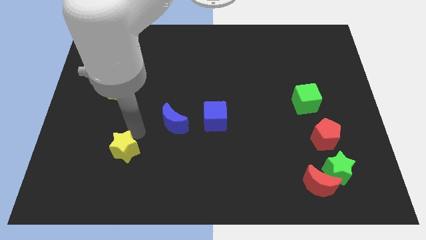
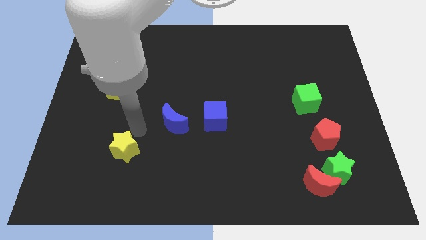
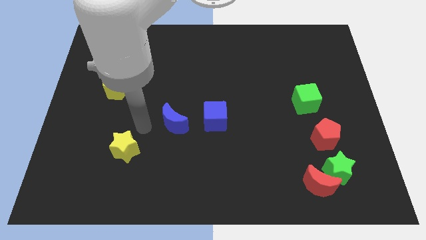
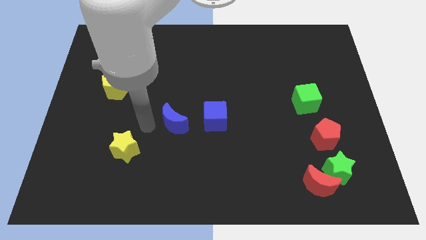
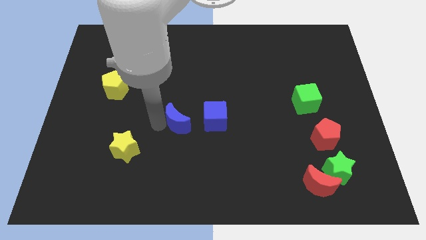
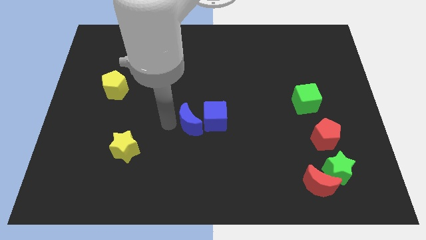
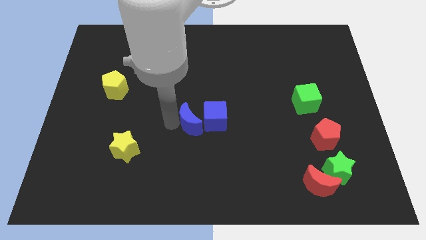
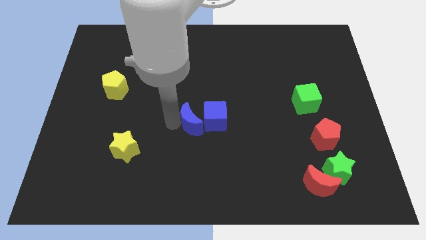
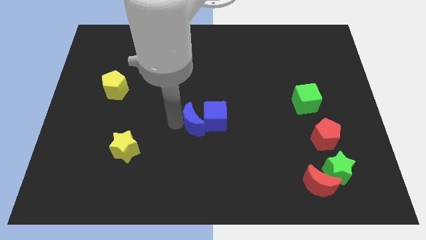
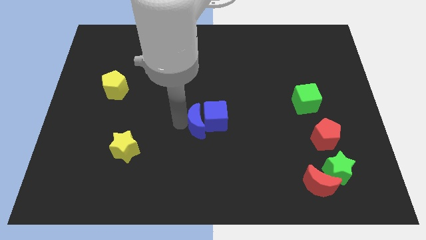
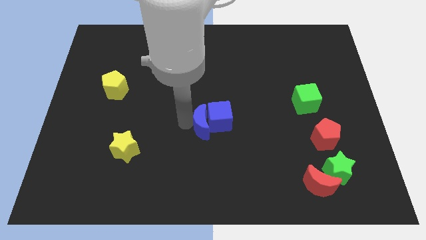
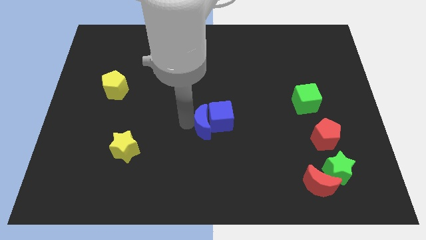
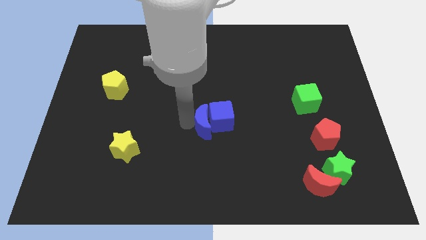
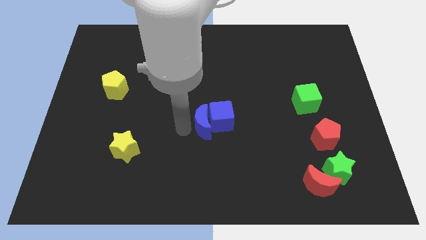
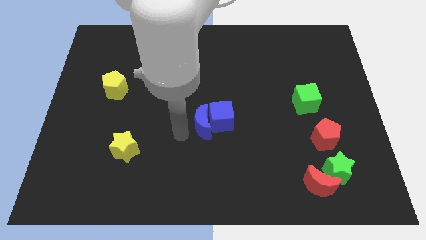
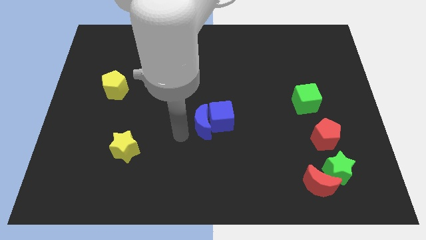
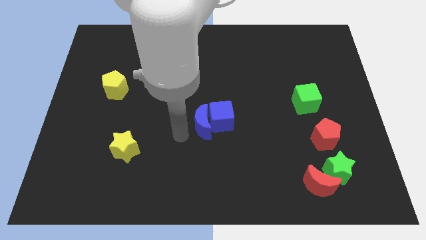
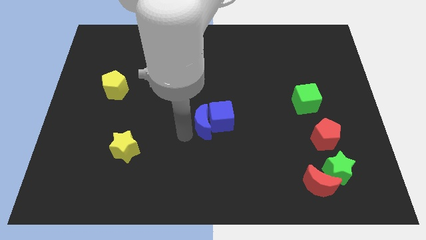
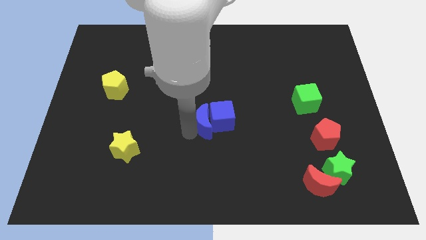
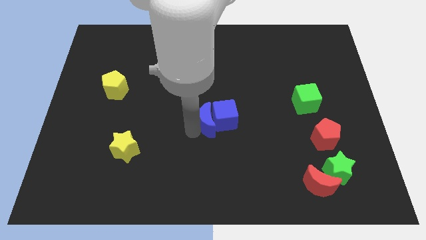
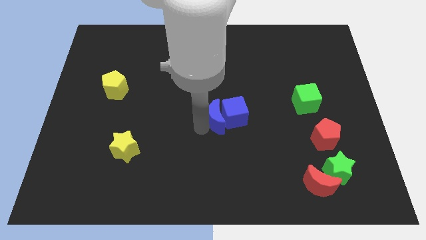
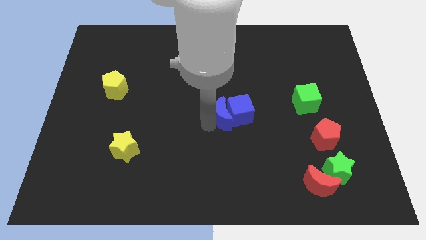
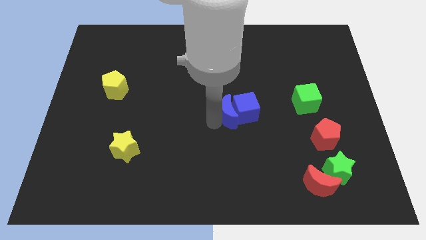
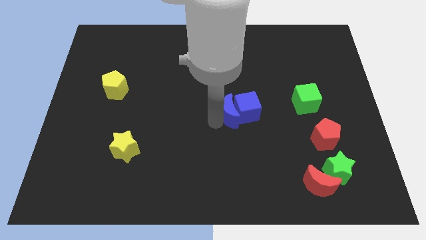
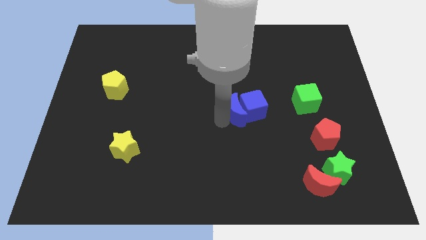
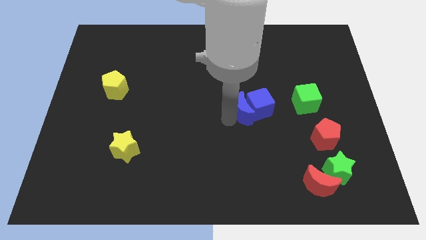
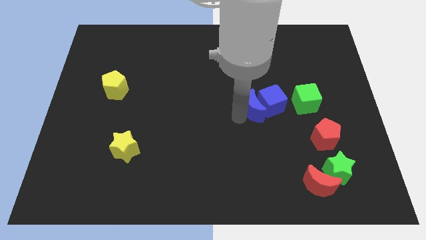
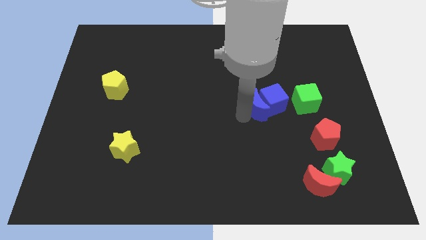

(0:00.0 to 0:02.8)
push blue cubes towards green cube

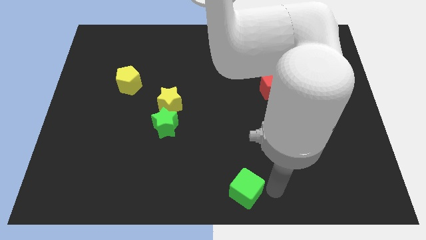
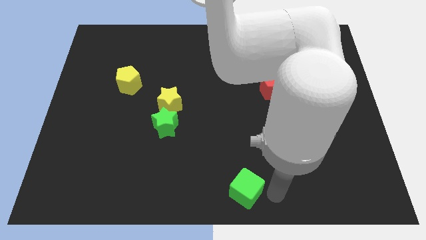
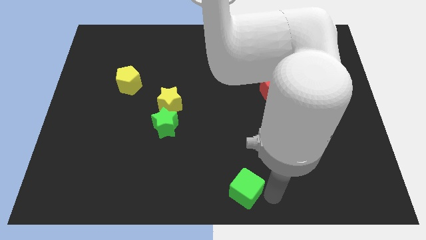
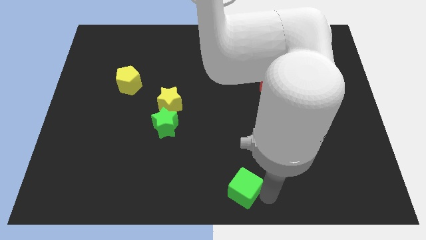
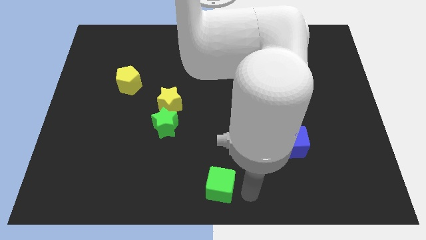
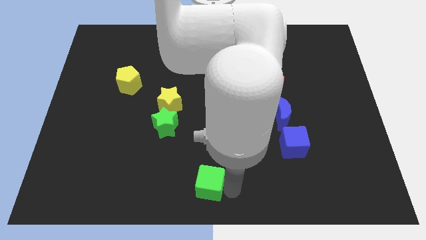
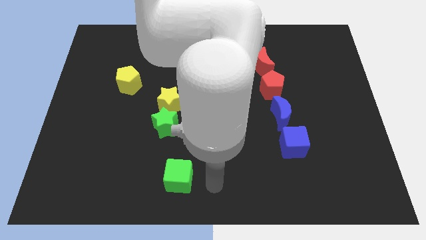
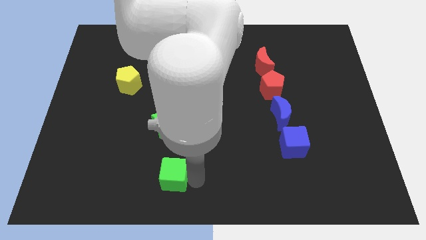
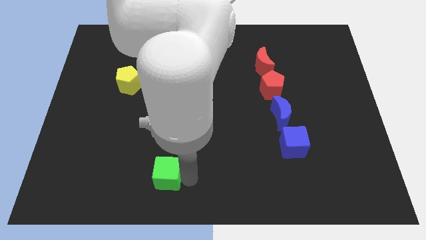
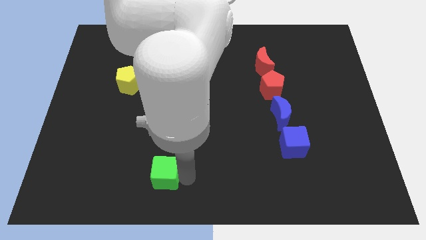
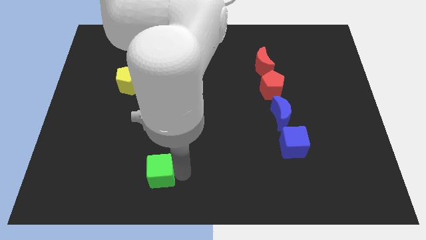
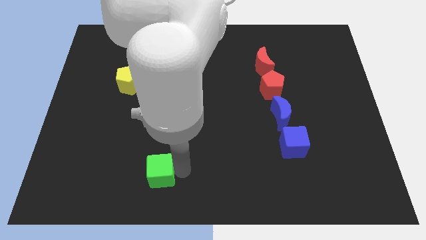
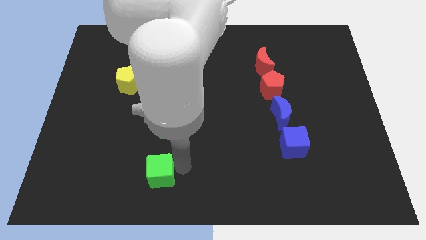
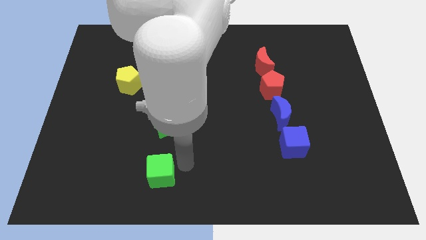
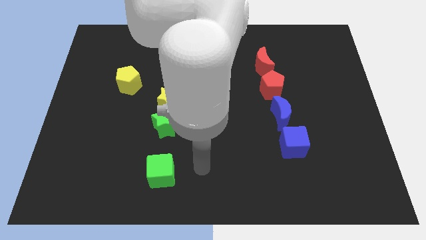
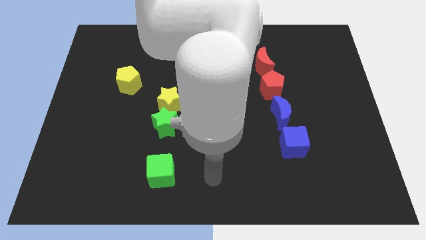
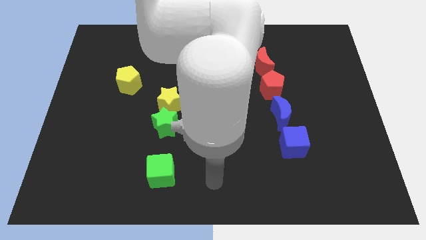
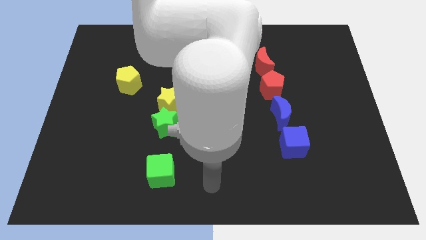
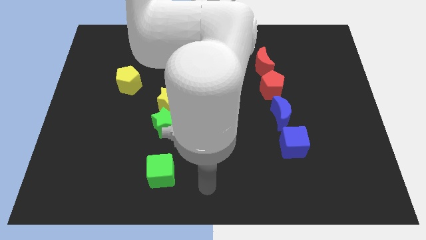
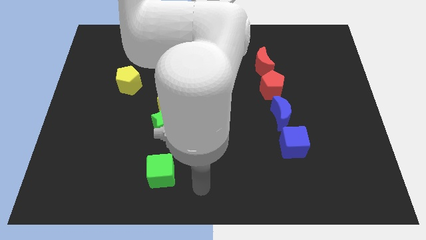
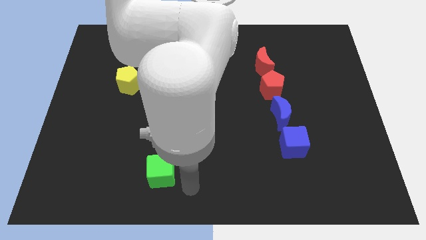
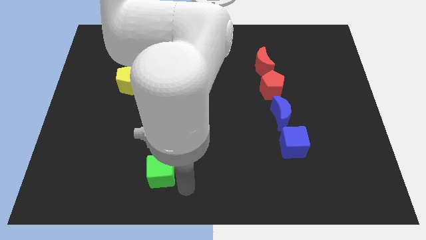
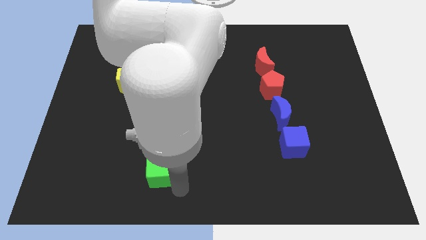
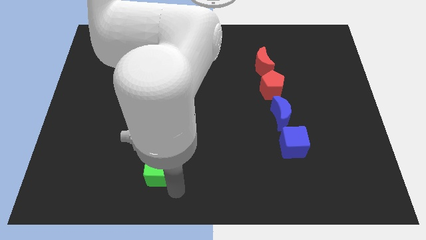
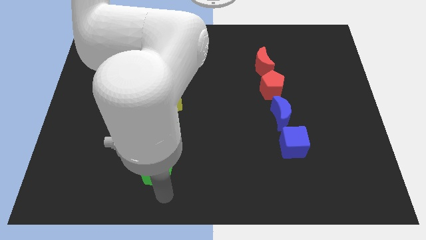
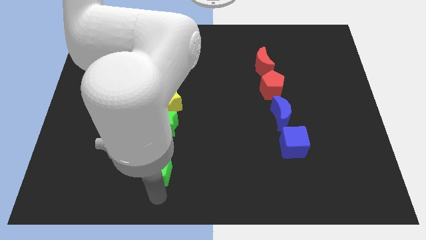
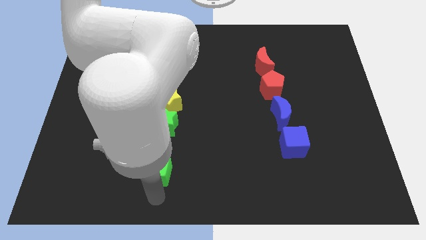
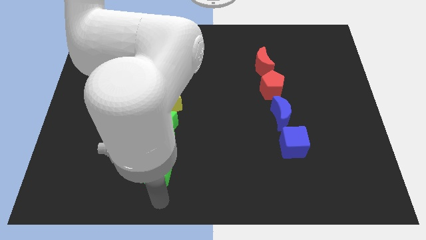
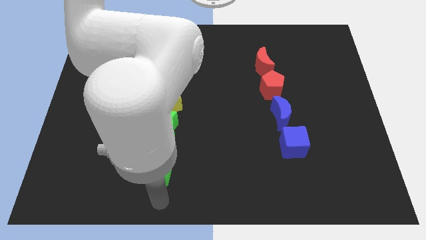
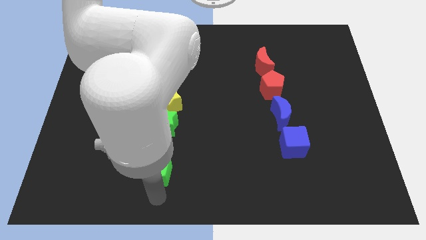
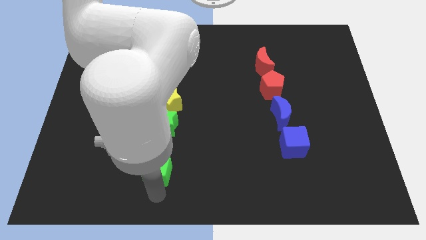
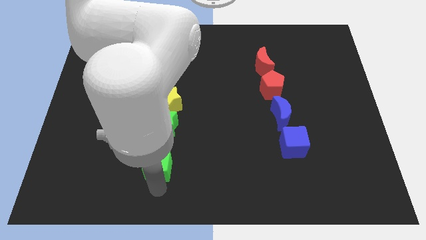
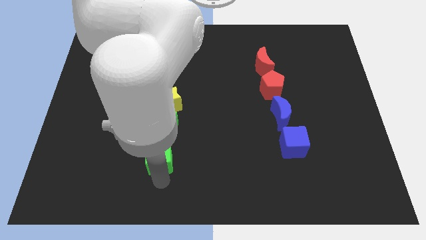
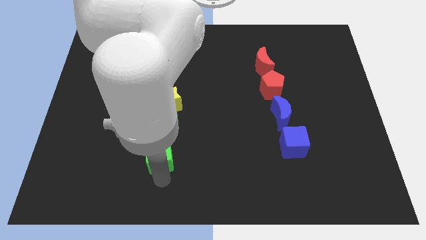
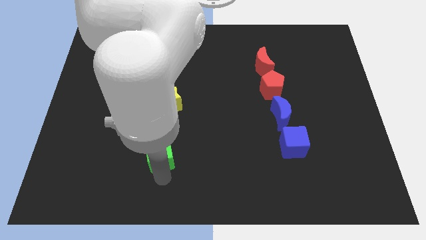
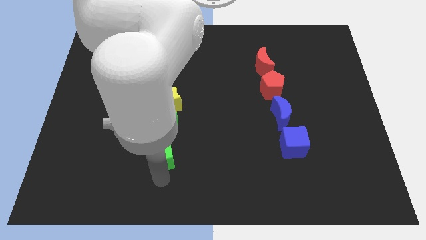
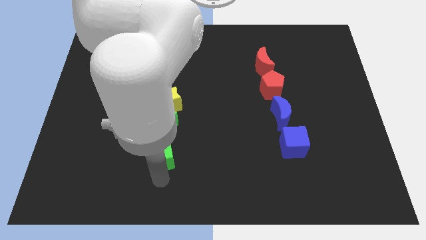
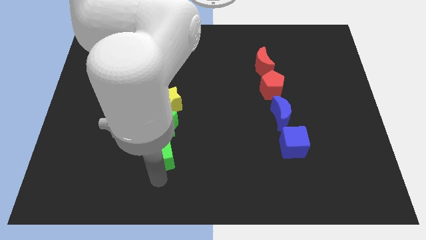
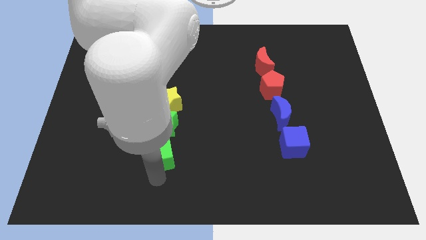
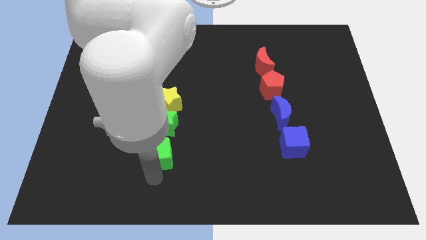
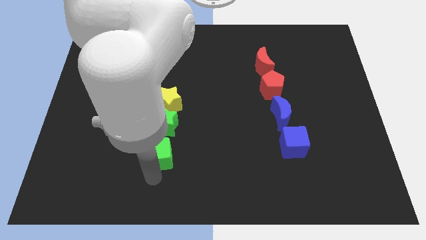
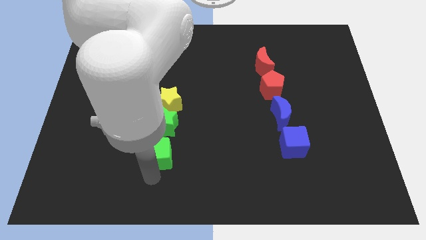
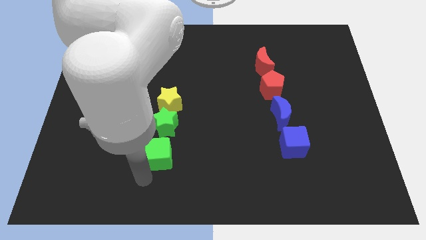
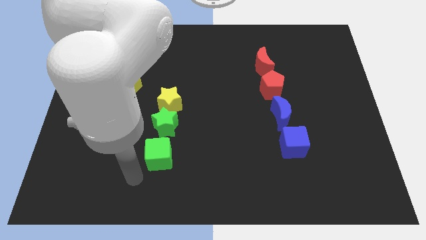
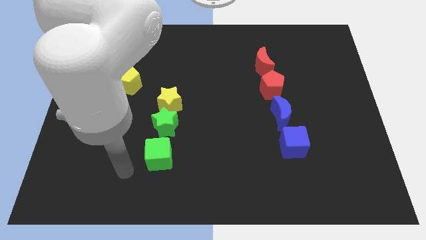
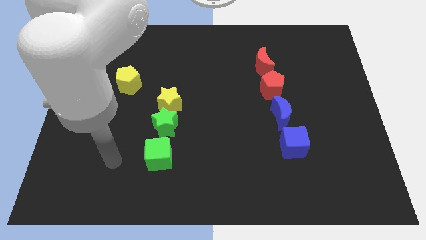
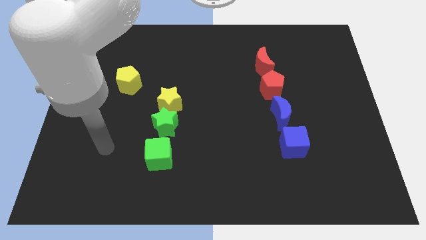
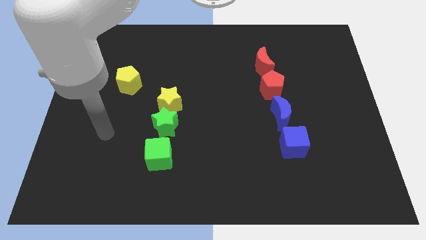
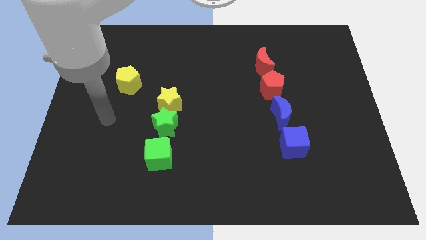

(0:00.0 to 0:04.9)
move the green cube vertically down to green star

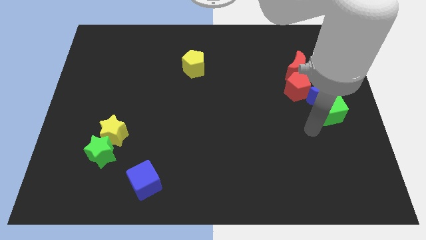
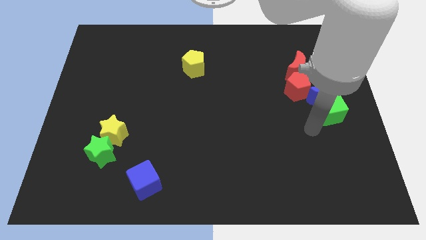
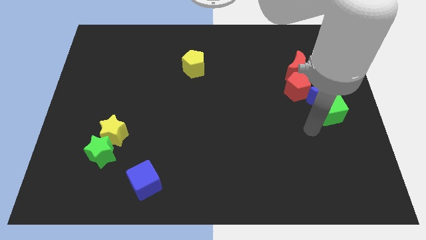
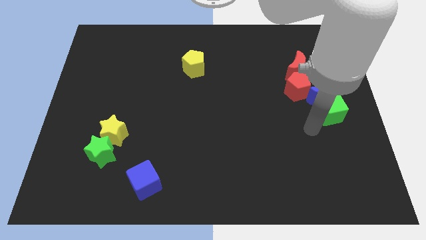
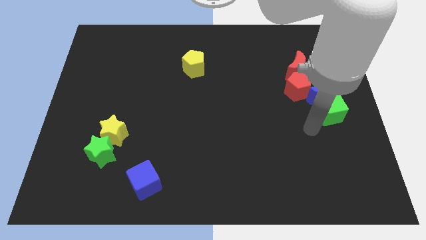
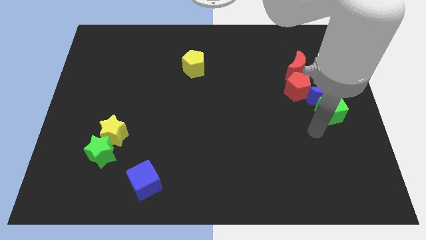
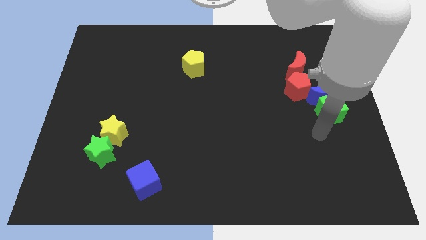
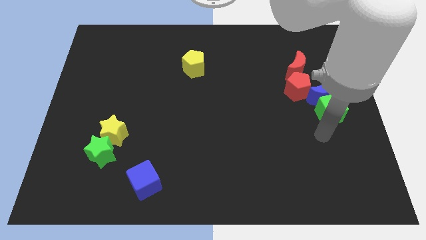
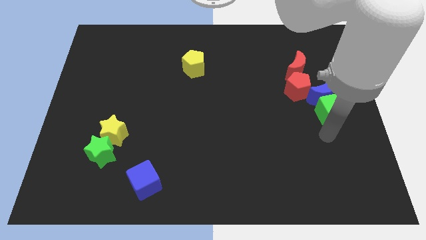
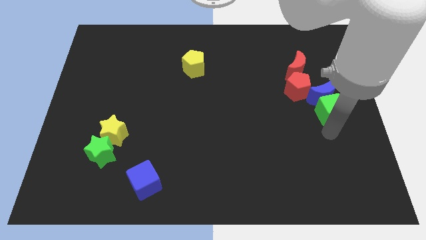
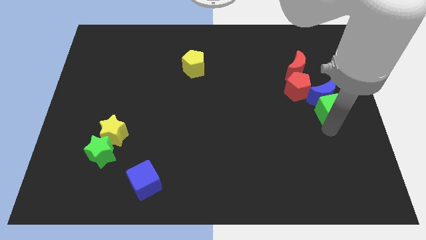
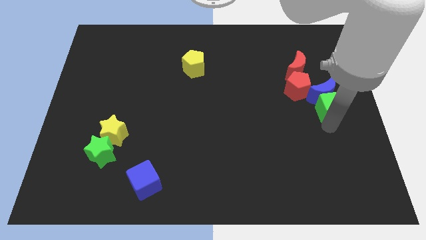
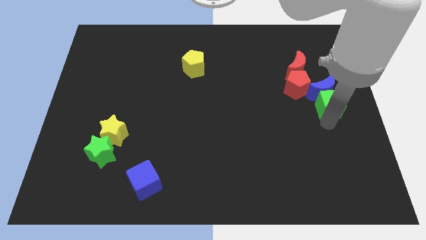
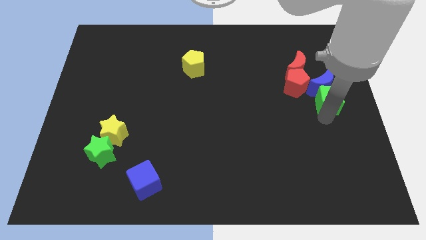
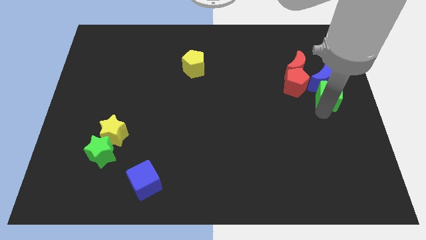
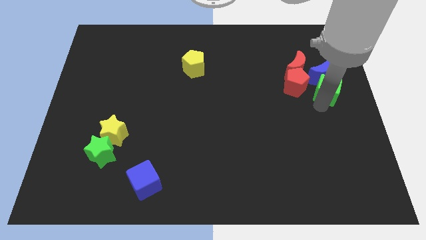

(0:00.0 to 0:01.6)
push the green cube and blue moon upwards
